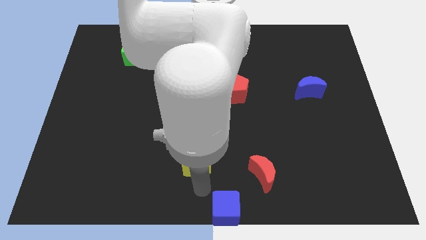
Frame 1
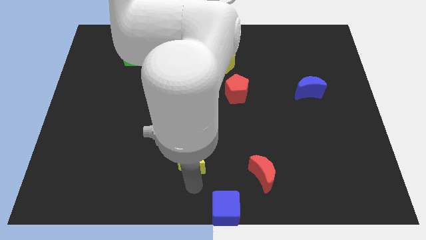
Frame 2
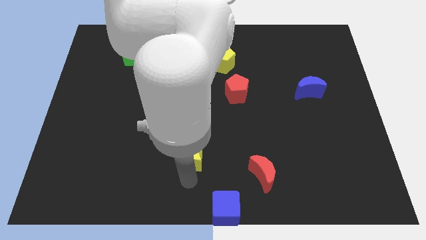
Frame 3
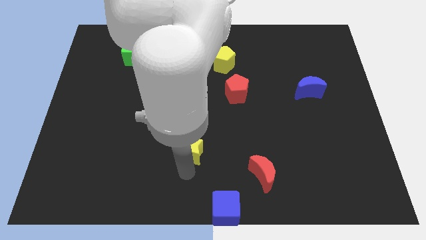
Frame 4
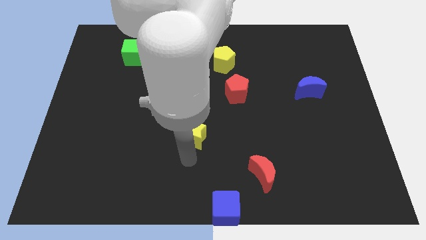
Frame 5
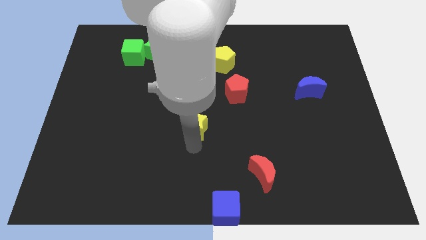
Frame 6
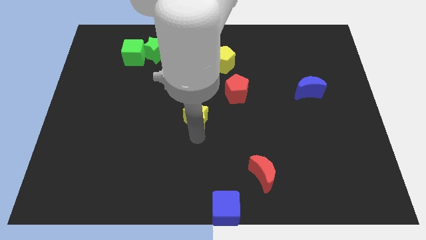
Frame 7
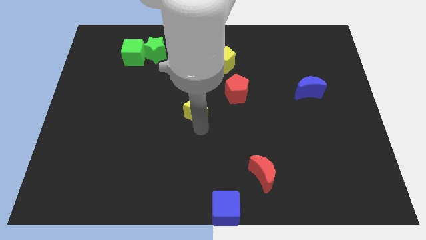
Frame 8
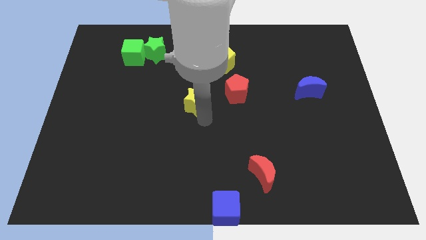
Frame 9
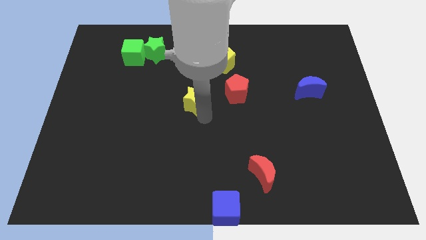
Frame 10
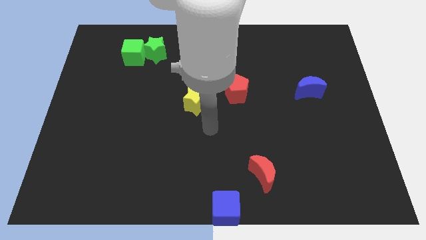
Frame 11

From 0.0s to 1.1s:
push yellow star beside red pentagon

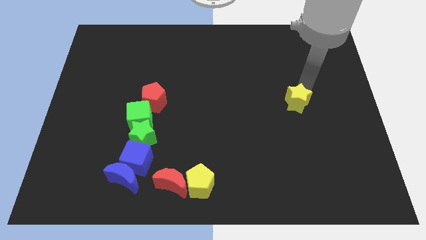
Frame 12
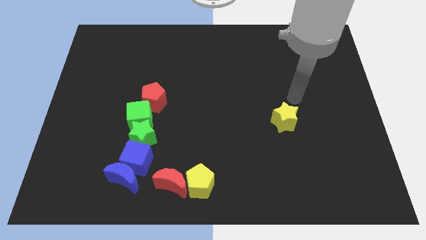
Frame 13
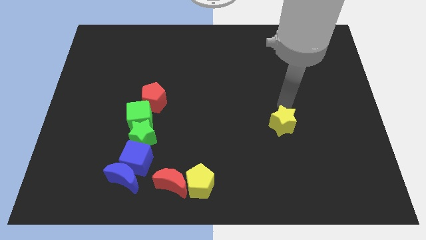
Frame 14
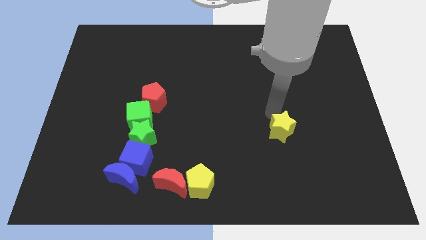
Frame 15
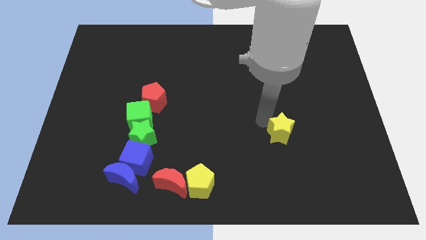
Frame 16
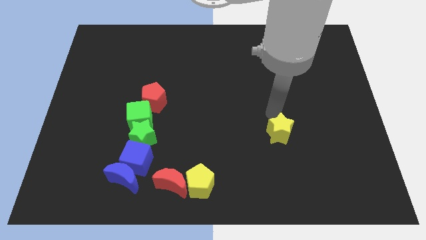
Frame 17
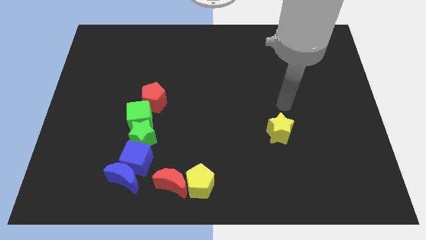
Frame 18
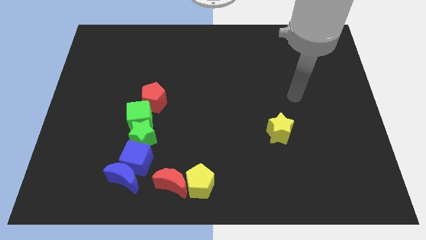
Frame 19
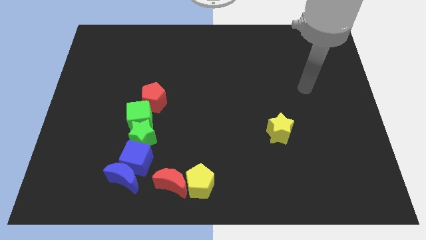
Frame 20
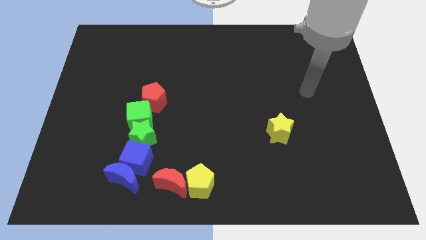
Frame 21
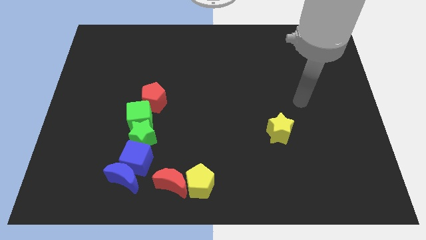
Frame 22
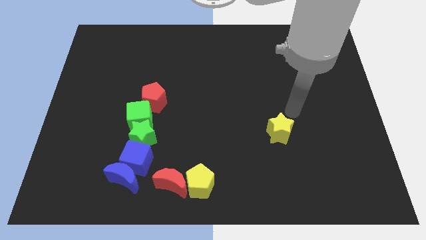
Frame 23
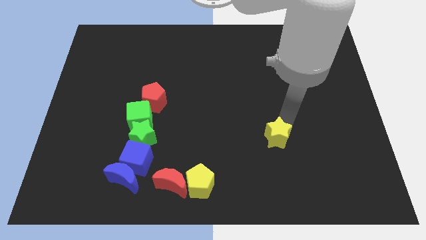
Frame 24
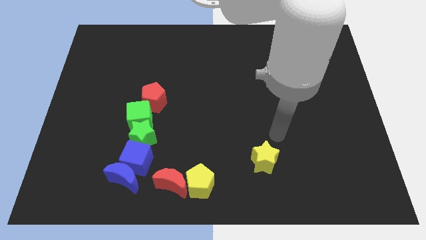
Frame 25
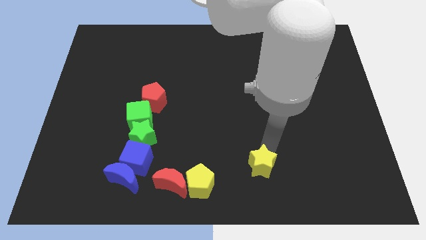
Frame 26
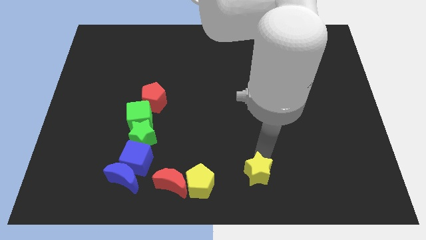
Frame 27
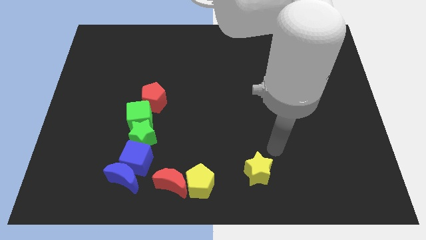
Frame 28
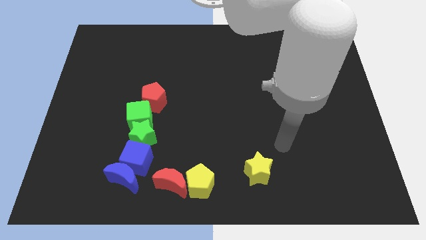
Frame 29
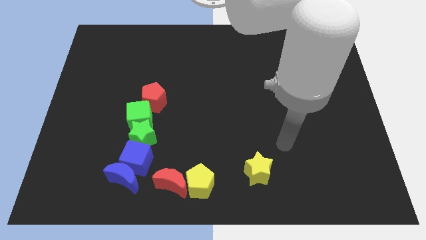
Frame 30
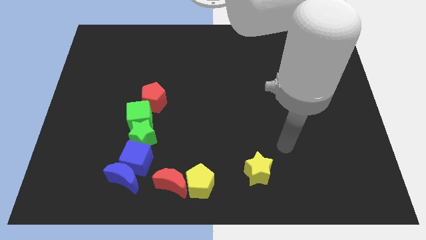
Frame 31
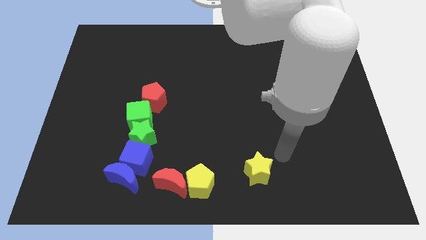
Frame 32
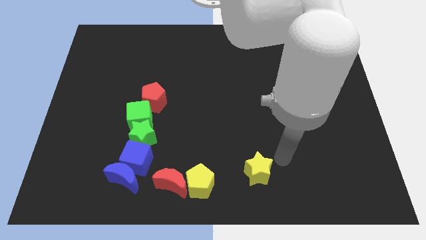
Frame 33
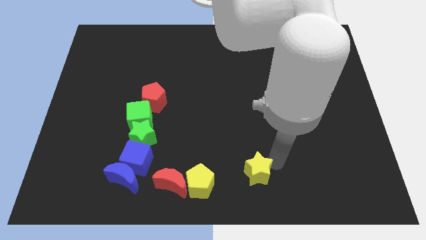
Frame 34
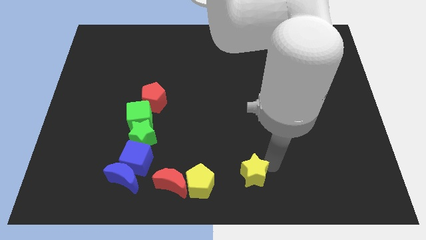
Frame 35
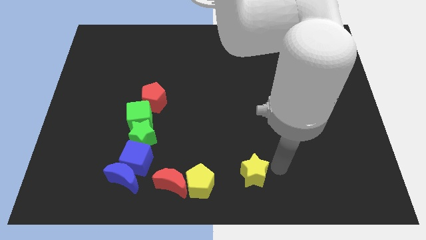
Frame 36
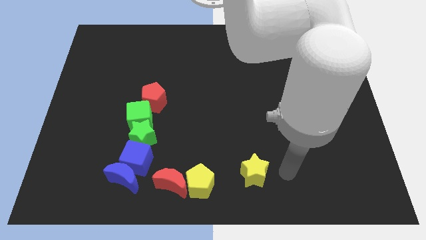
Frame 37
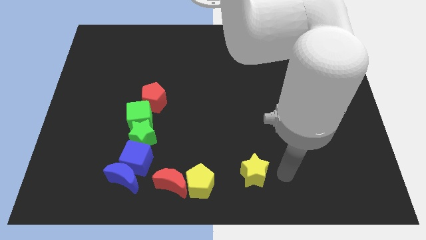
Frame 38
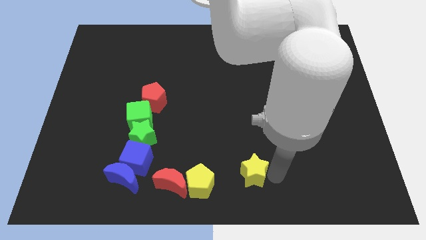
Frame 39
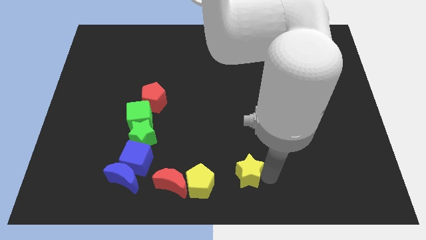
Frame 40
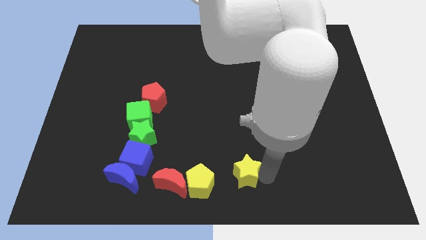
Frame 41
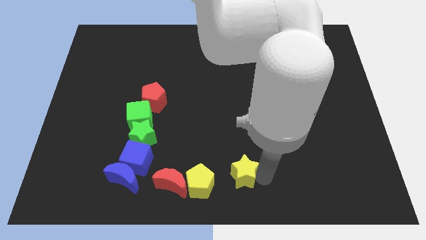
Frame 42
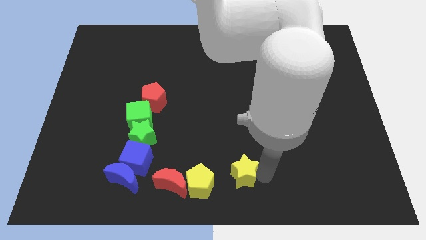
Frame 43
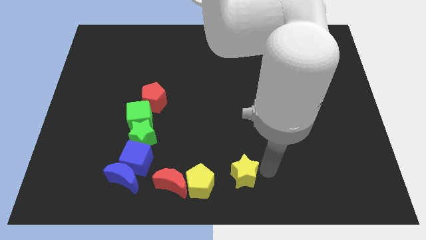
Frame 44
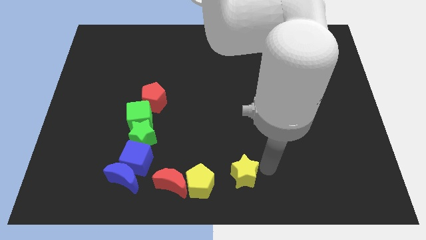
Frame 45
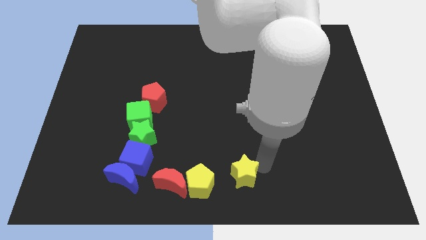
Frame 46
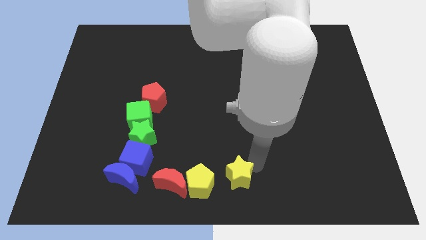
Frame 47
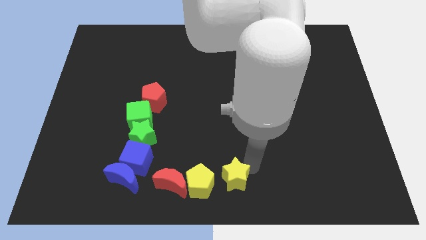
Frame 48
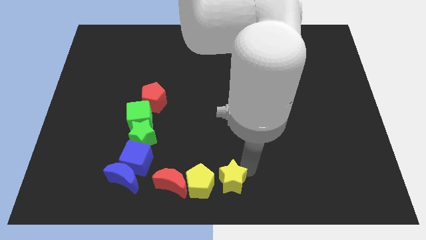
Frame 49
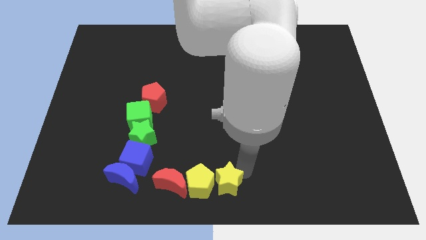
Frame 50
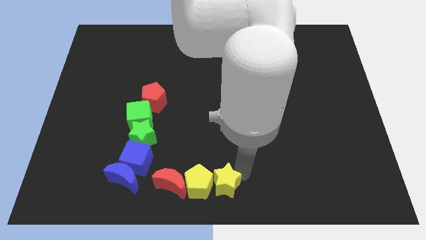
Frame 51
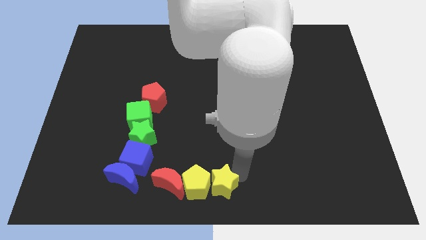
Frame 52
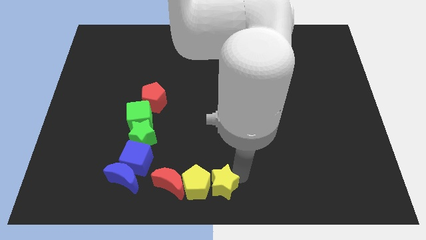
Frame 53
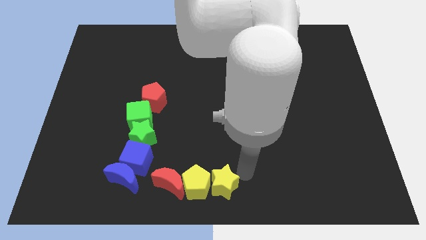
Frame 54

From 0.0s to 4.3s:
move the yellow star horizontally on the right side of the yellow pentagon

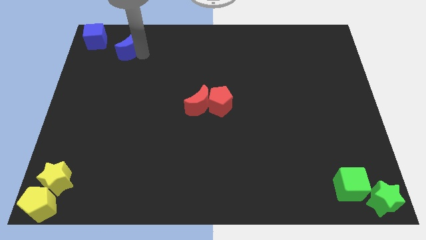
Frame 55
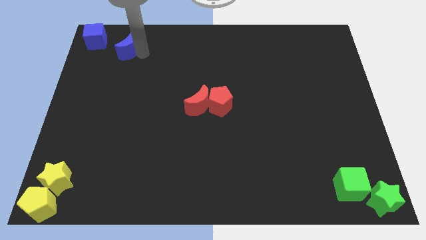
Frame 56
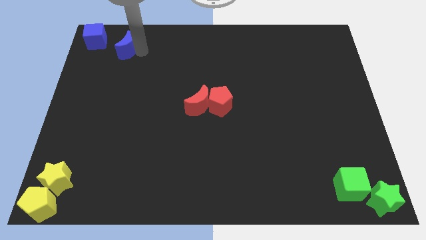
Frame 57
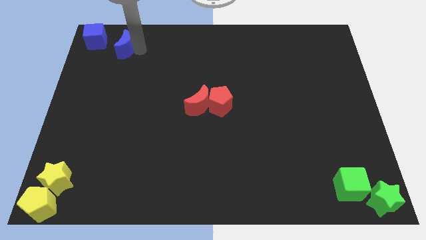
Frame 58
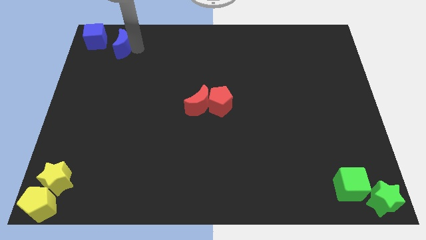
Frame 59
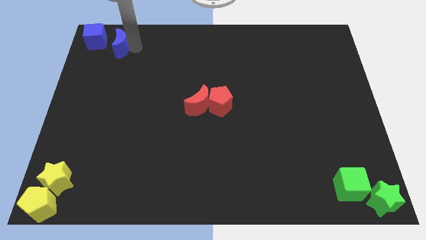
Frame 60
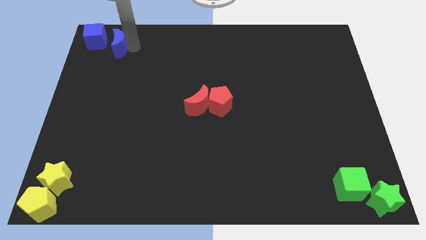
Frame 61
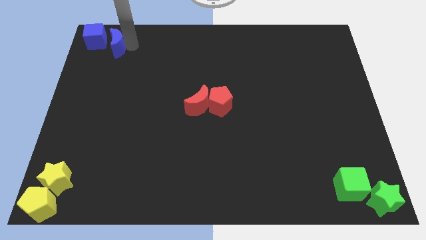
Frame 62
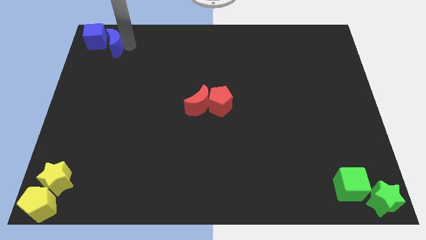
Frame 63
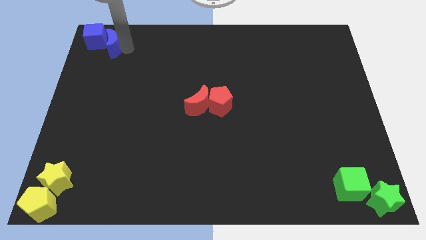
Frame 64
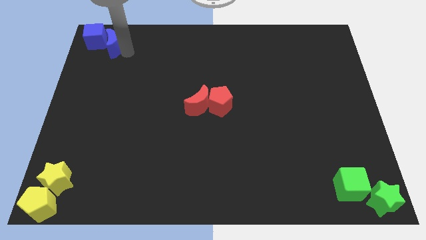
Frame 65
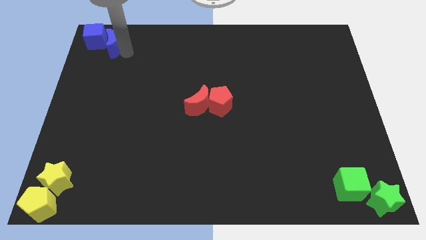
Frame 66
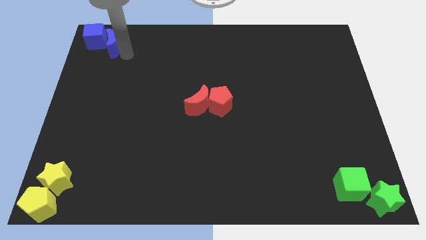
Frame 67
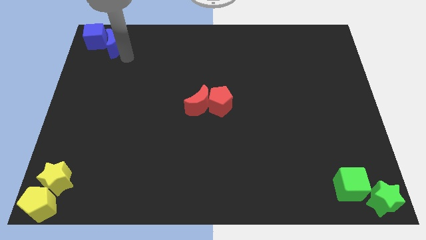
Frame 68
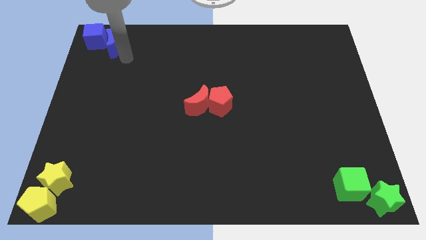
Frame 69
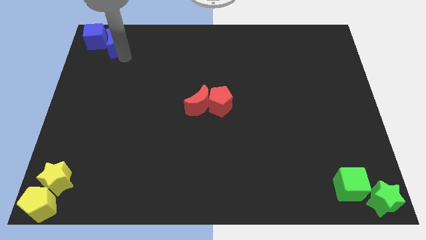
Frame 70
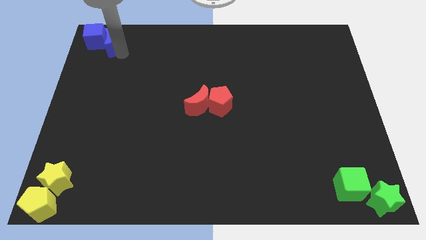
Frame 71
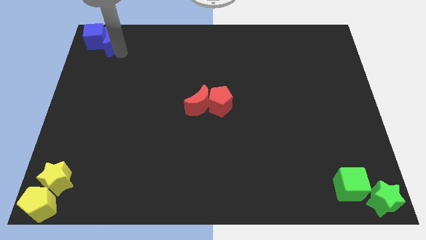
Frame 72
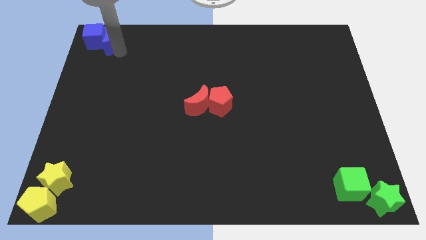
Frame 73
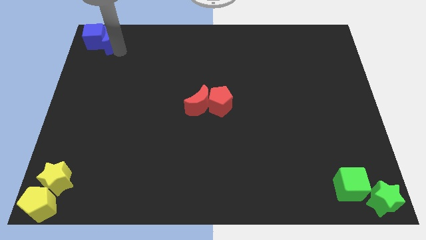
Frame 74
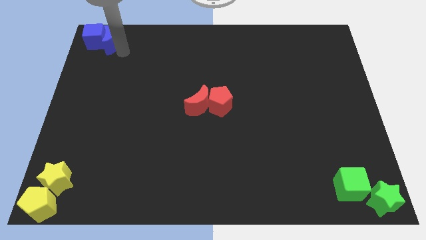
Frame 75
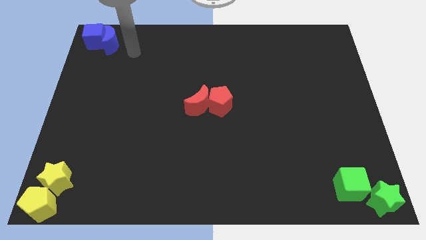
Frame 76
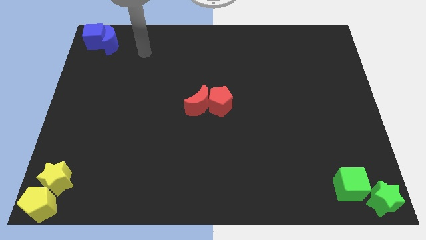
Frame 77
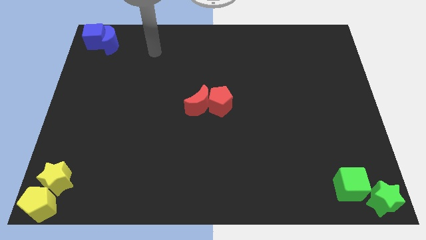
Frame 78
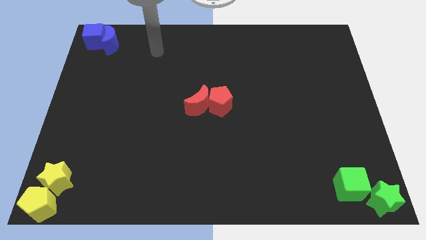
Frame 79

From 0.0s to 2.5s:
put blue blocks together

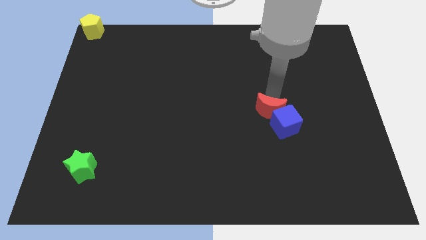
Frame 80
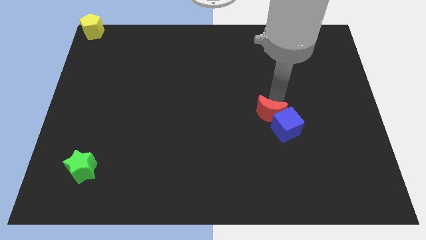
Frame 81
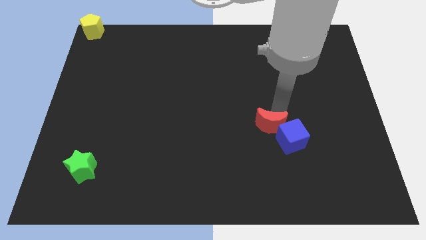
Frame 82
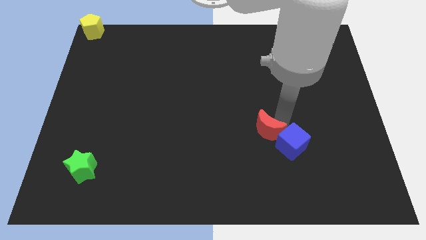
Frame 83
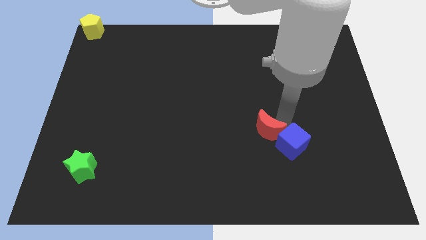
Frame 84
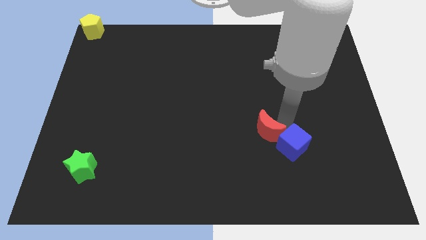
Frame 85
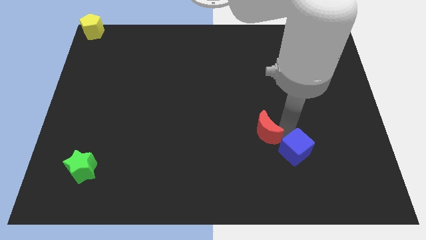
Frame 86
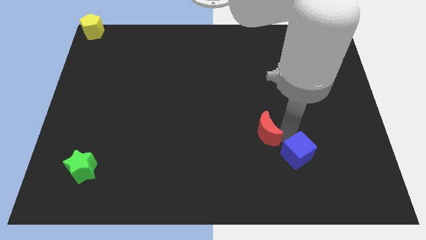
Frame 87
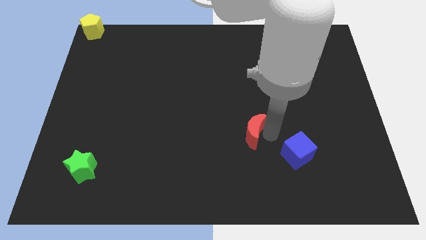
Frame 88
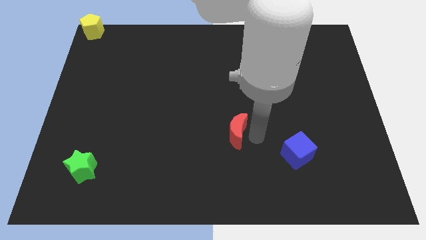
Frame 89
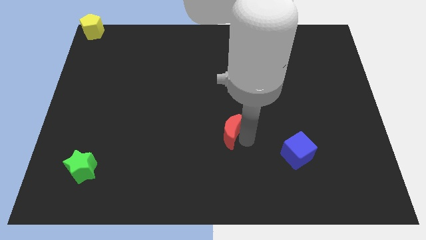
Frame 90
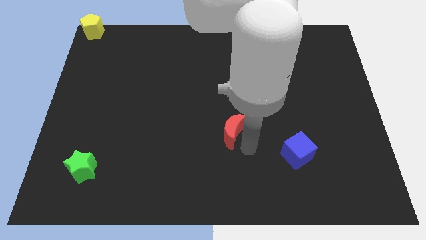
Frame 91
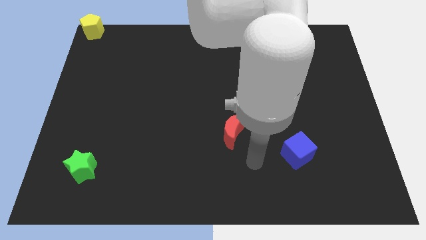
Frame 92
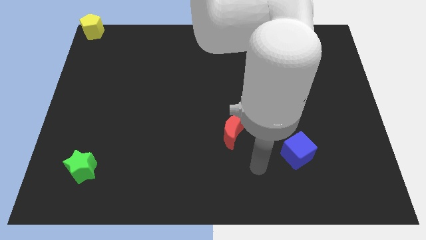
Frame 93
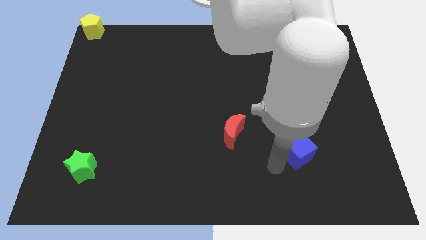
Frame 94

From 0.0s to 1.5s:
separate the red moon from the blue cube
